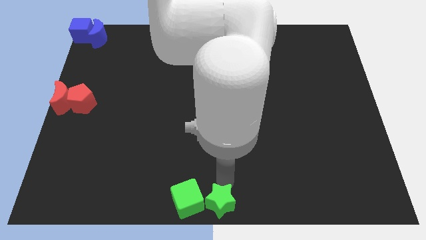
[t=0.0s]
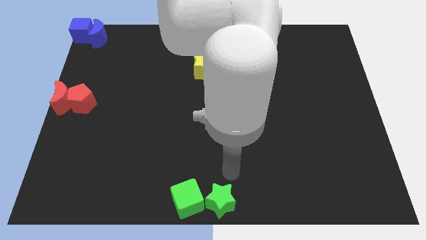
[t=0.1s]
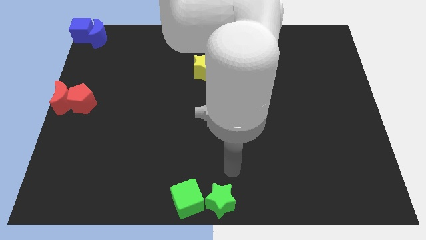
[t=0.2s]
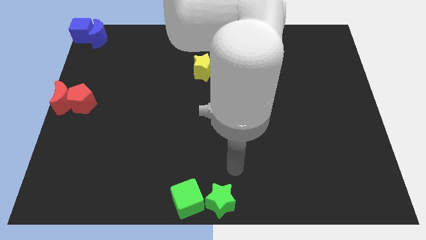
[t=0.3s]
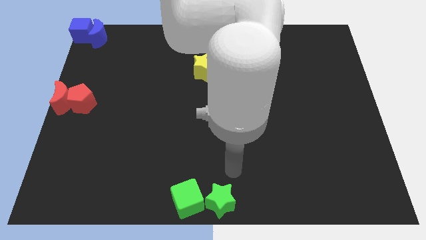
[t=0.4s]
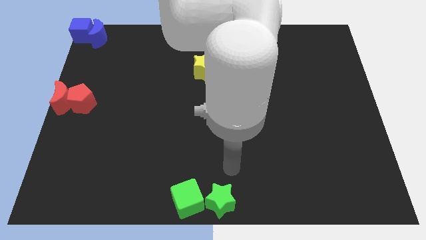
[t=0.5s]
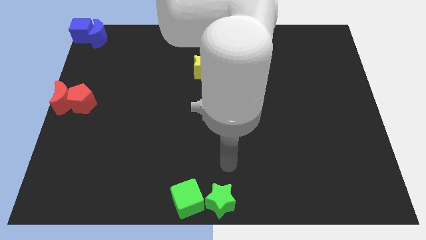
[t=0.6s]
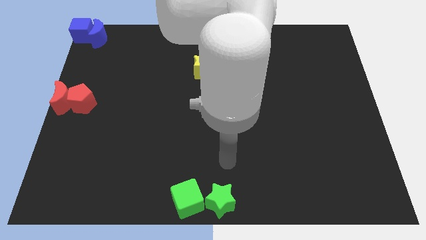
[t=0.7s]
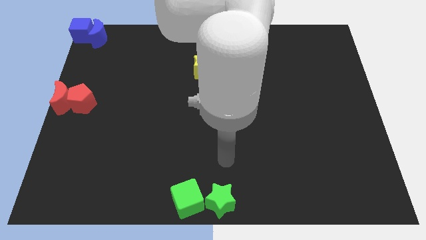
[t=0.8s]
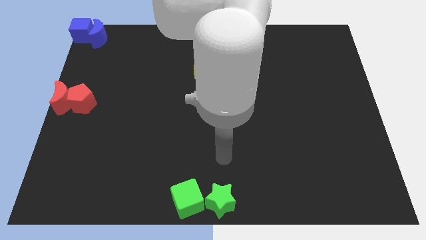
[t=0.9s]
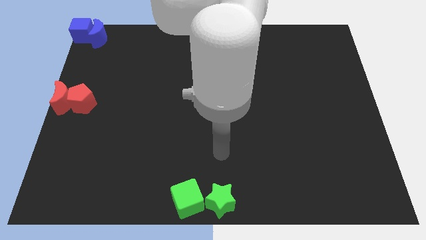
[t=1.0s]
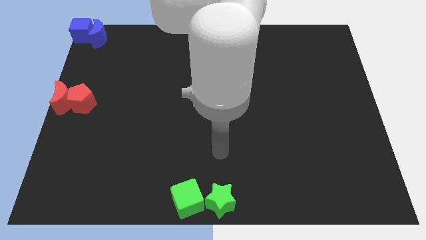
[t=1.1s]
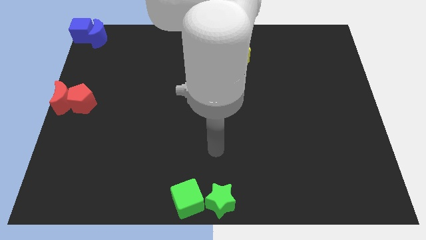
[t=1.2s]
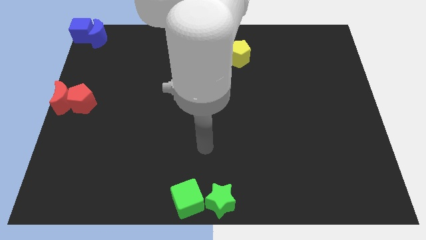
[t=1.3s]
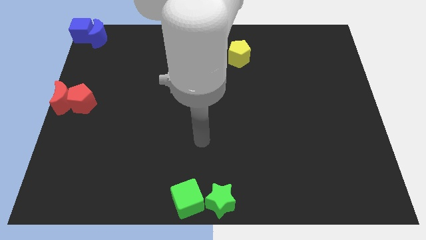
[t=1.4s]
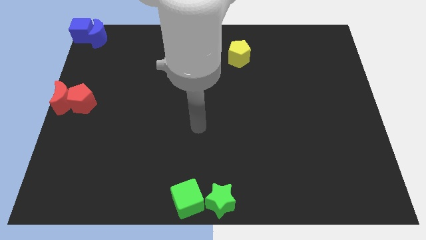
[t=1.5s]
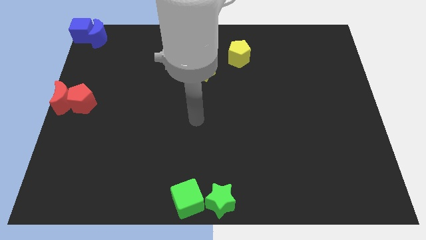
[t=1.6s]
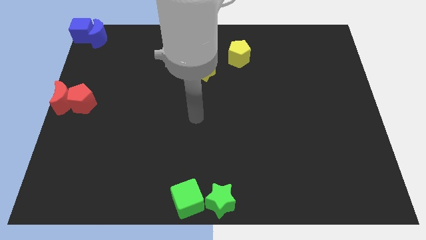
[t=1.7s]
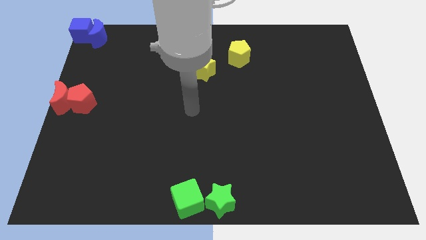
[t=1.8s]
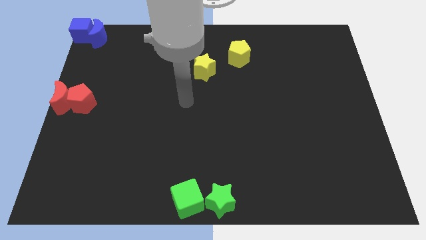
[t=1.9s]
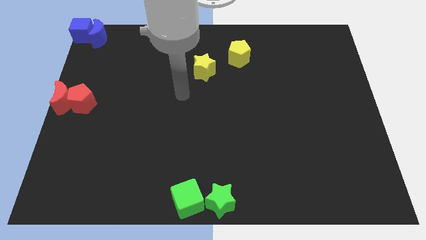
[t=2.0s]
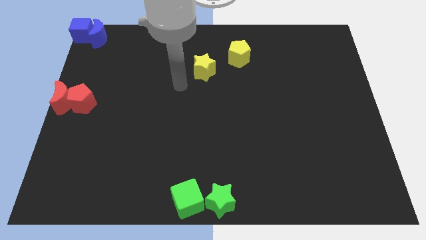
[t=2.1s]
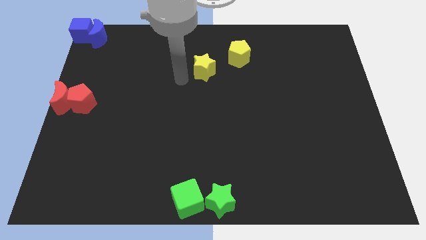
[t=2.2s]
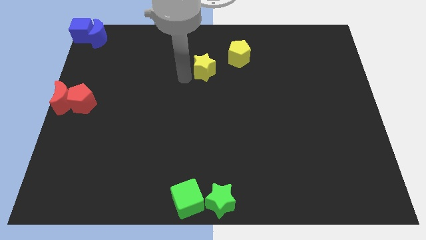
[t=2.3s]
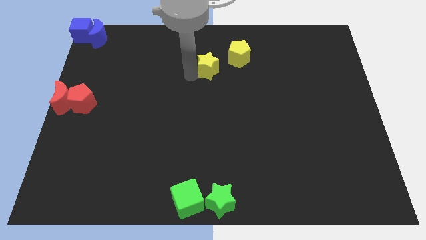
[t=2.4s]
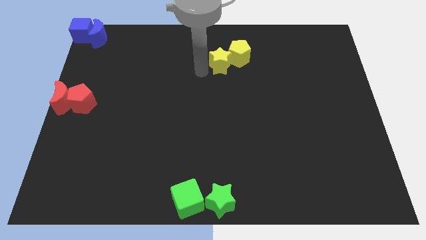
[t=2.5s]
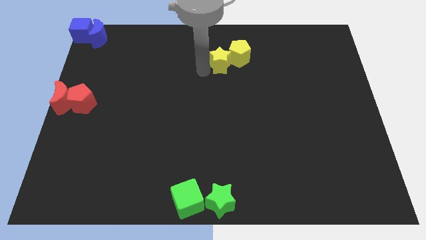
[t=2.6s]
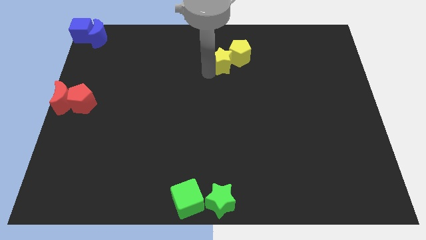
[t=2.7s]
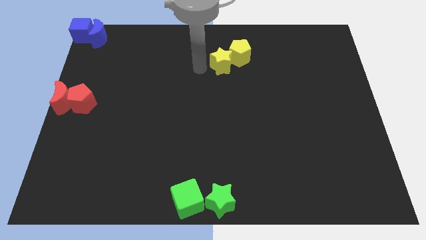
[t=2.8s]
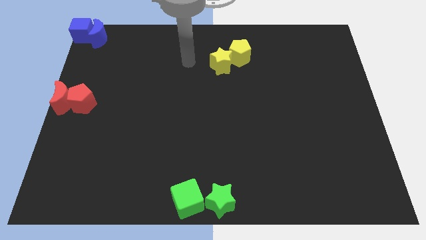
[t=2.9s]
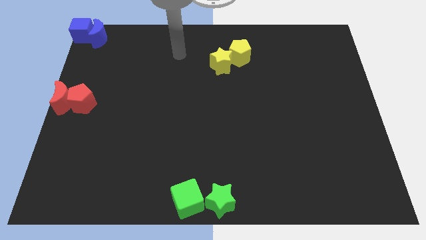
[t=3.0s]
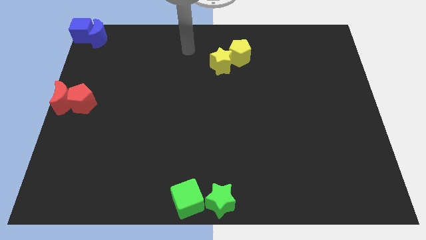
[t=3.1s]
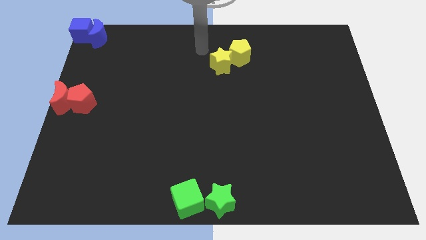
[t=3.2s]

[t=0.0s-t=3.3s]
push the yellow star into the yellow pentagon

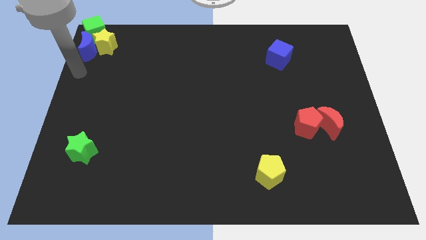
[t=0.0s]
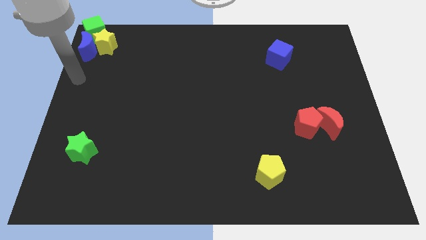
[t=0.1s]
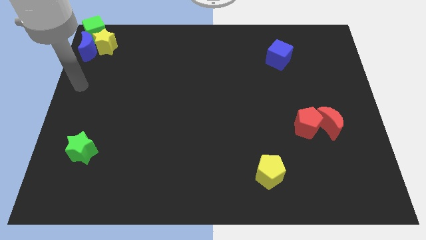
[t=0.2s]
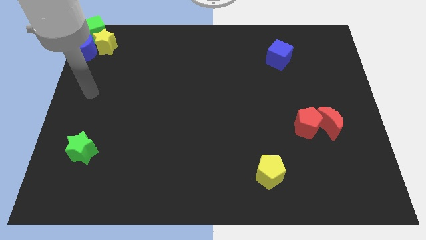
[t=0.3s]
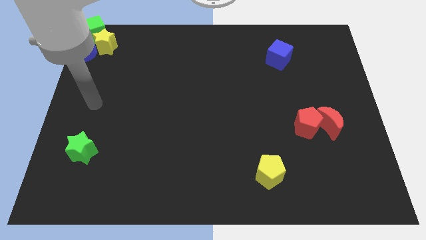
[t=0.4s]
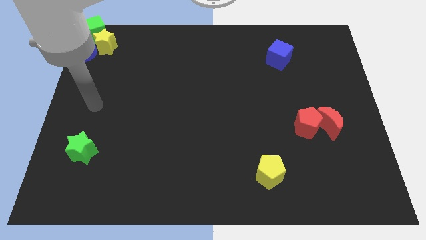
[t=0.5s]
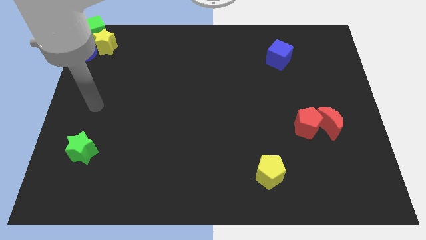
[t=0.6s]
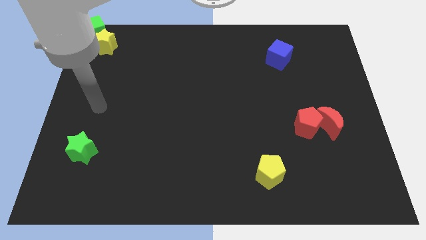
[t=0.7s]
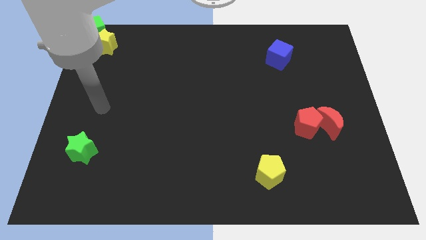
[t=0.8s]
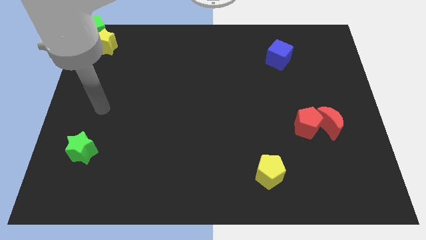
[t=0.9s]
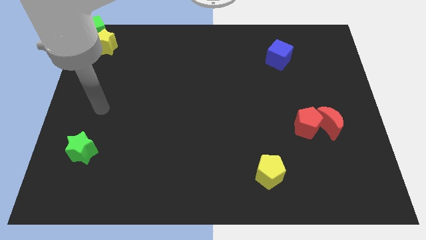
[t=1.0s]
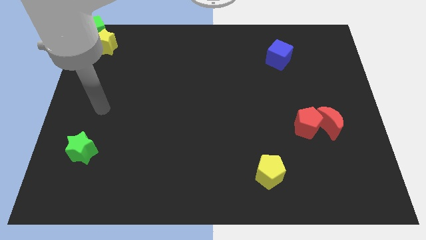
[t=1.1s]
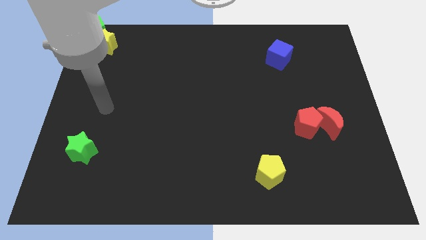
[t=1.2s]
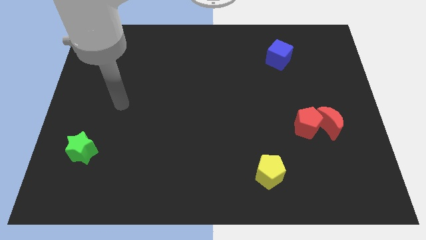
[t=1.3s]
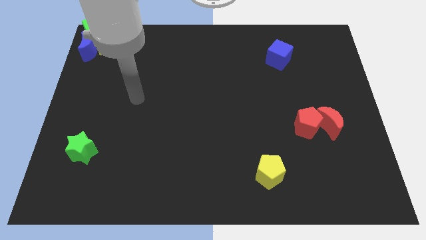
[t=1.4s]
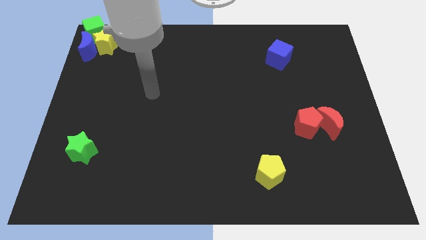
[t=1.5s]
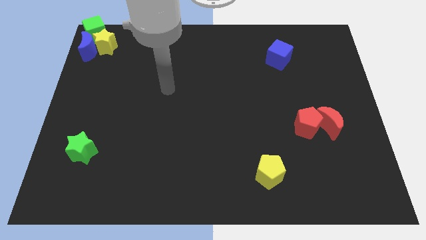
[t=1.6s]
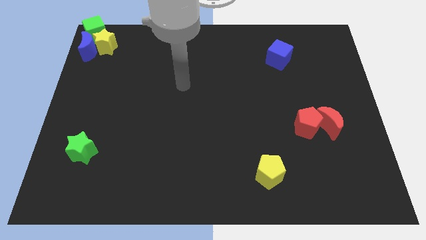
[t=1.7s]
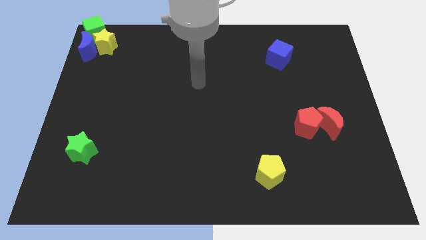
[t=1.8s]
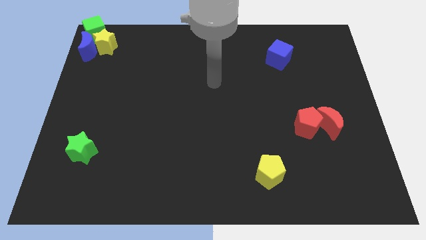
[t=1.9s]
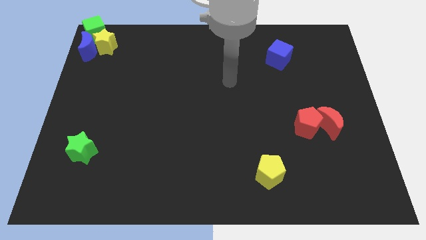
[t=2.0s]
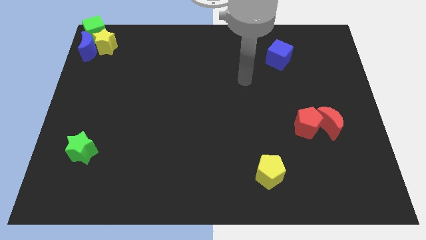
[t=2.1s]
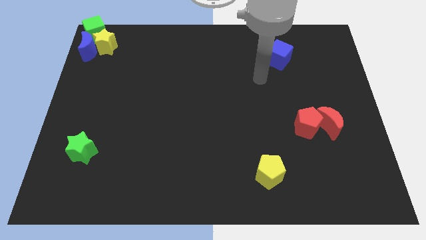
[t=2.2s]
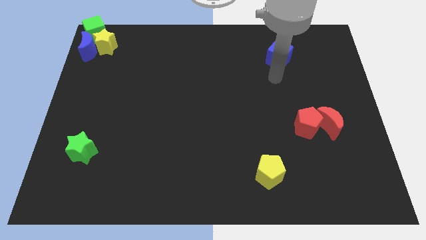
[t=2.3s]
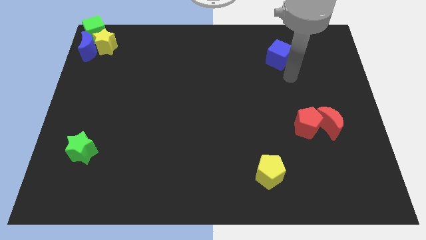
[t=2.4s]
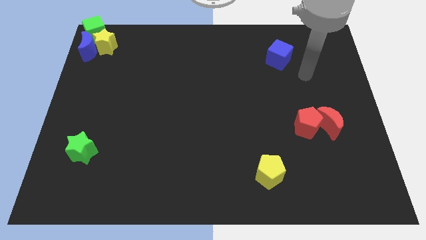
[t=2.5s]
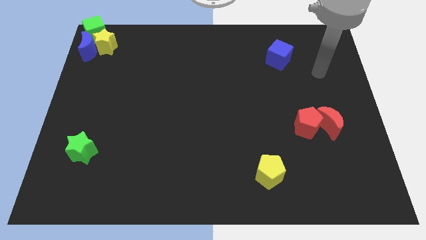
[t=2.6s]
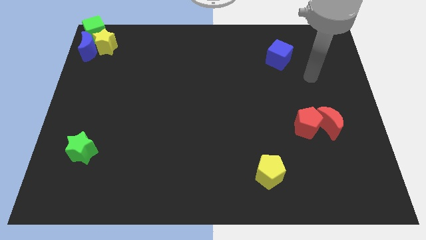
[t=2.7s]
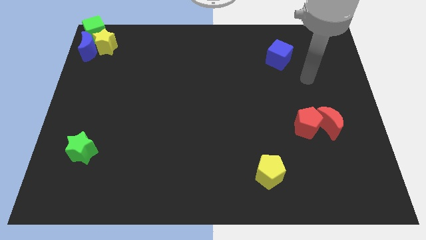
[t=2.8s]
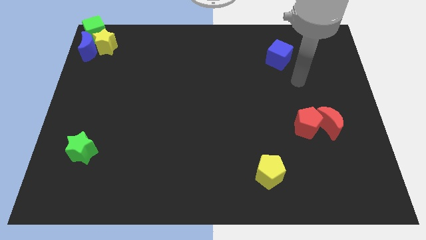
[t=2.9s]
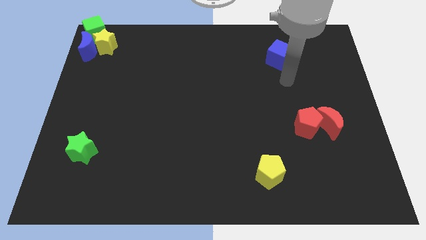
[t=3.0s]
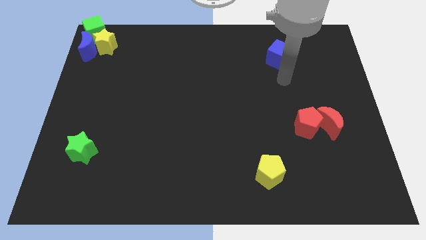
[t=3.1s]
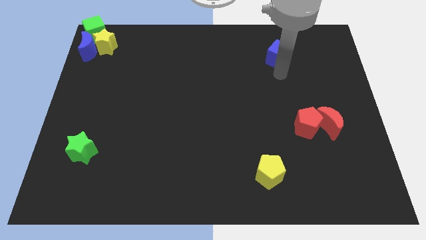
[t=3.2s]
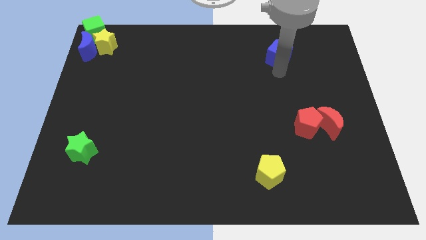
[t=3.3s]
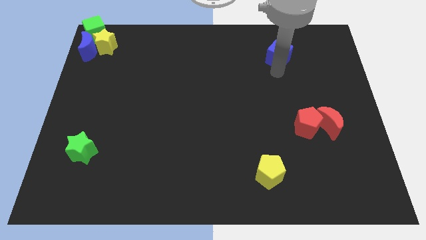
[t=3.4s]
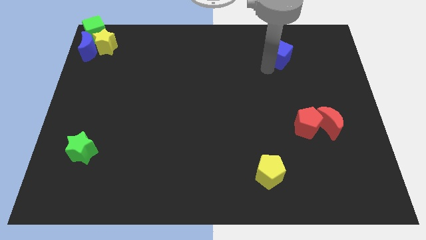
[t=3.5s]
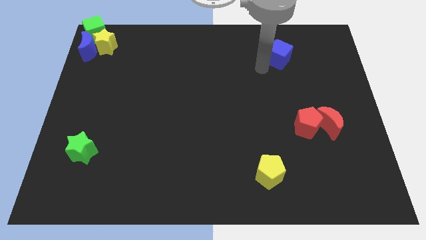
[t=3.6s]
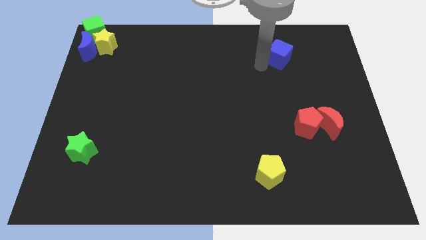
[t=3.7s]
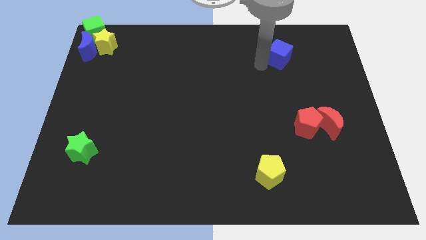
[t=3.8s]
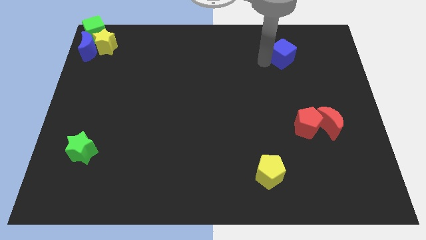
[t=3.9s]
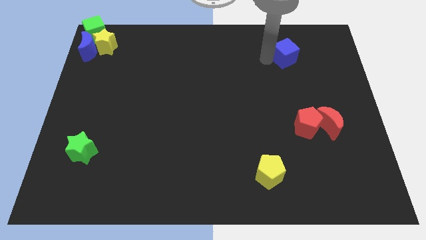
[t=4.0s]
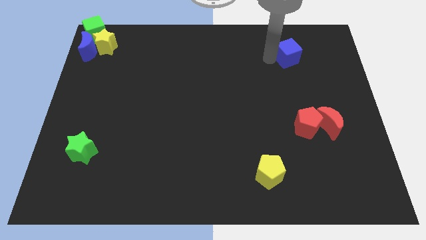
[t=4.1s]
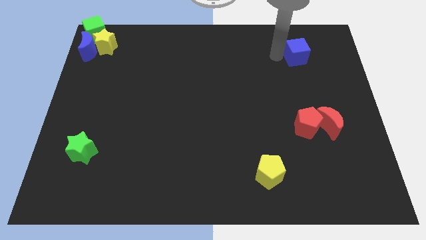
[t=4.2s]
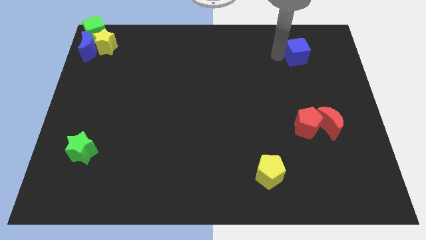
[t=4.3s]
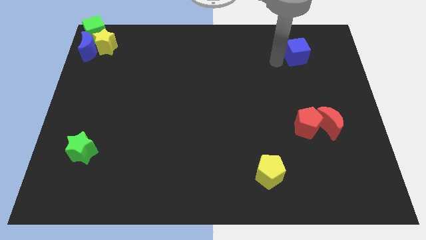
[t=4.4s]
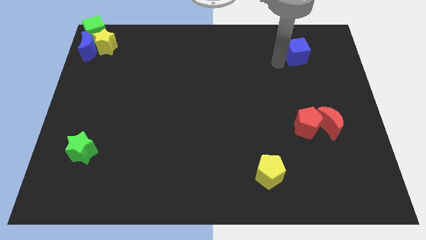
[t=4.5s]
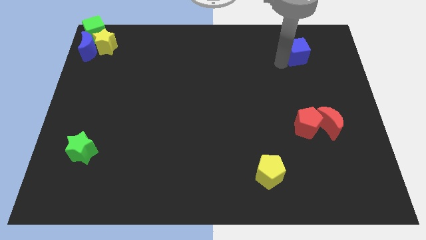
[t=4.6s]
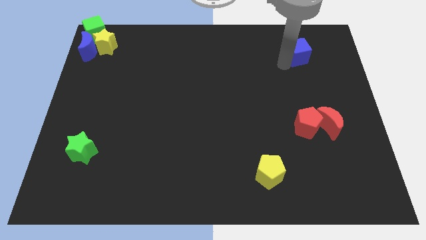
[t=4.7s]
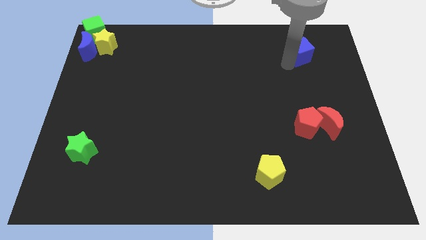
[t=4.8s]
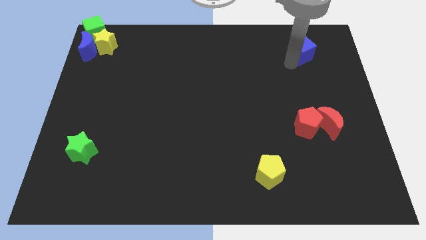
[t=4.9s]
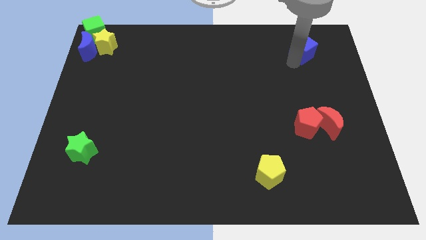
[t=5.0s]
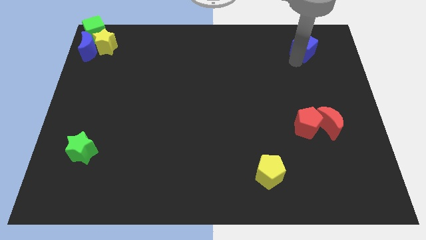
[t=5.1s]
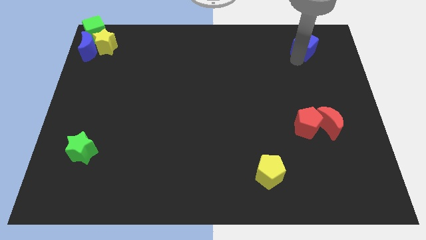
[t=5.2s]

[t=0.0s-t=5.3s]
move the blue cube to the top of the red pentagon

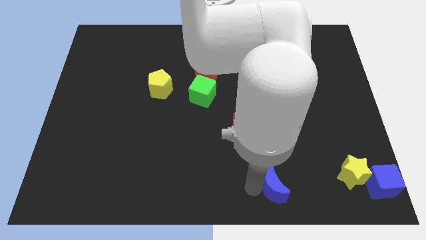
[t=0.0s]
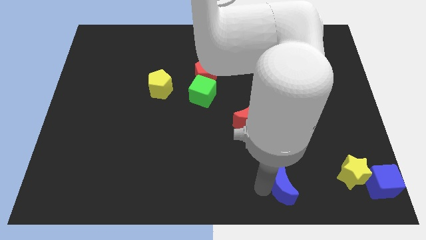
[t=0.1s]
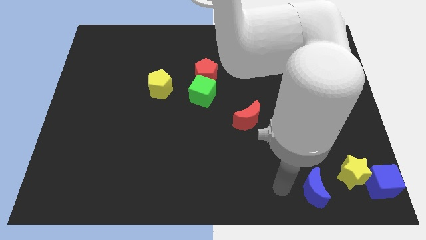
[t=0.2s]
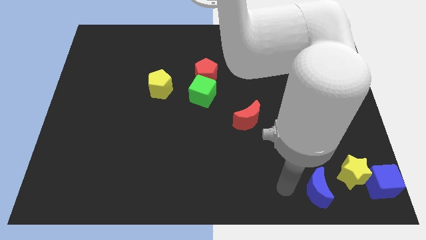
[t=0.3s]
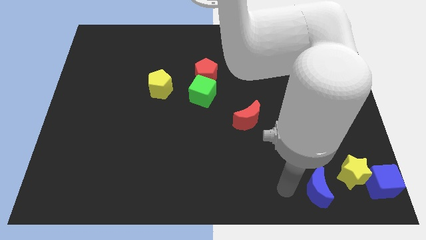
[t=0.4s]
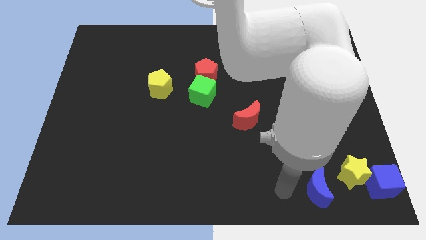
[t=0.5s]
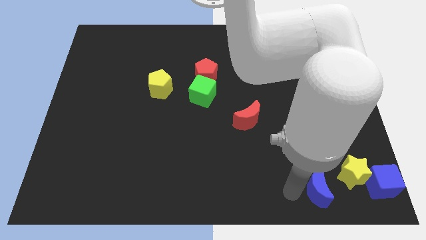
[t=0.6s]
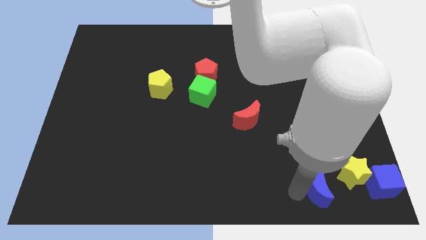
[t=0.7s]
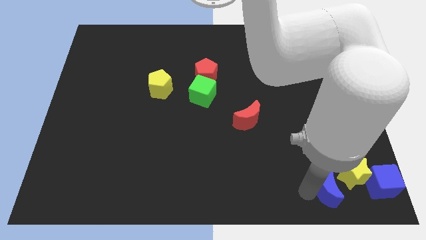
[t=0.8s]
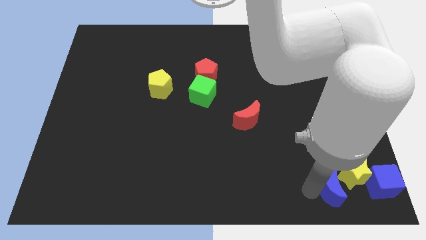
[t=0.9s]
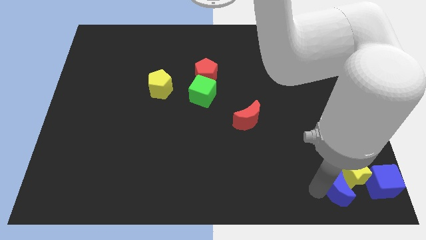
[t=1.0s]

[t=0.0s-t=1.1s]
place the blue moon diagonal to the red moon
